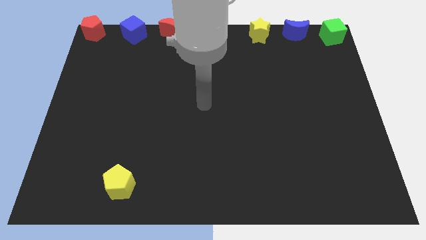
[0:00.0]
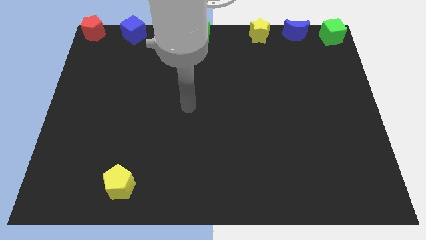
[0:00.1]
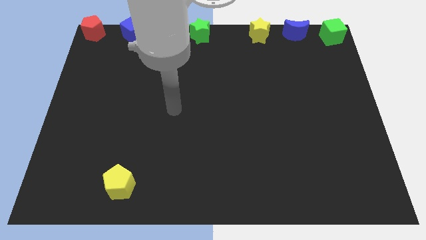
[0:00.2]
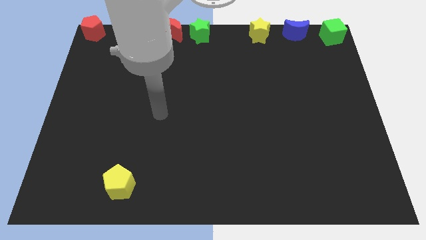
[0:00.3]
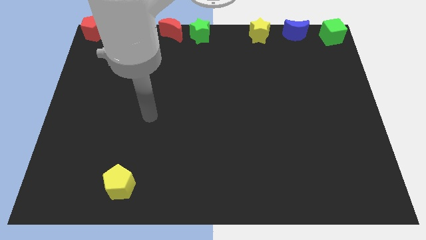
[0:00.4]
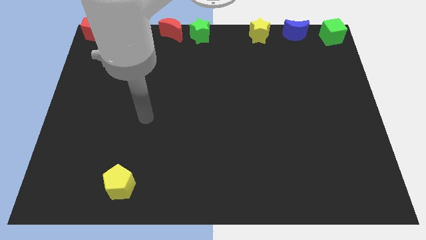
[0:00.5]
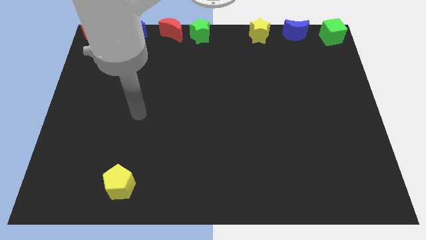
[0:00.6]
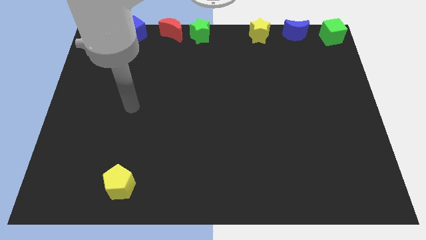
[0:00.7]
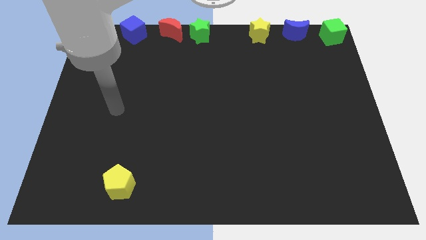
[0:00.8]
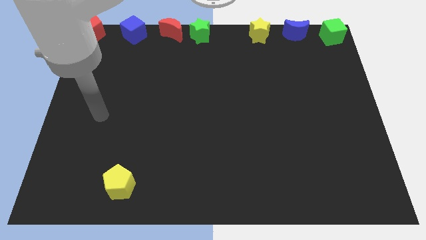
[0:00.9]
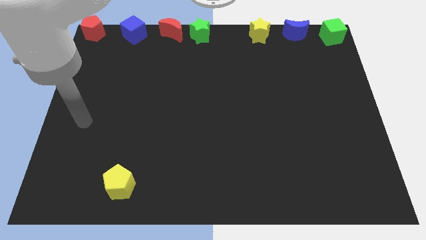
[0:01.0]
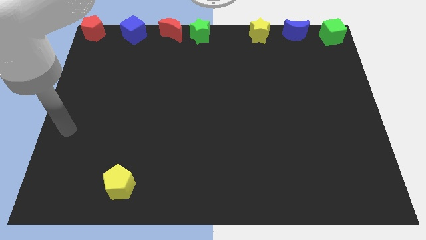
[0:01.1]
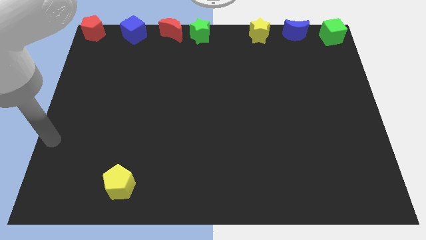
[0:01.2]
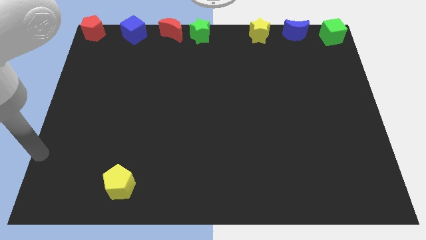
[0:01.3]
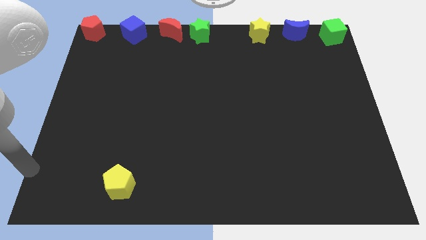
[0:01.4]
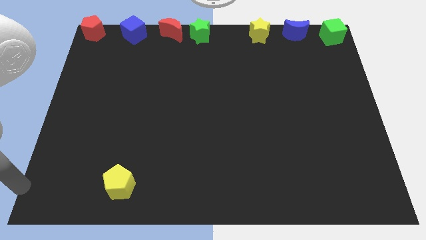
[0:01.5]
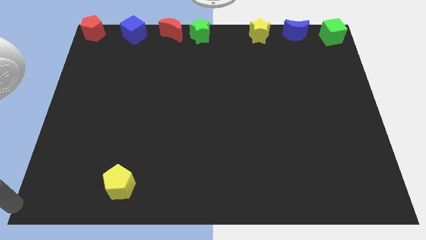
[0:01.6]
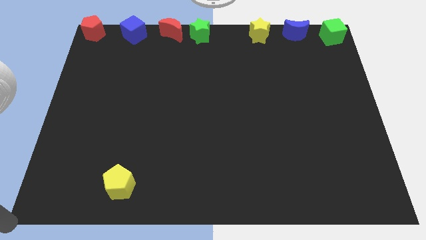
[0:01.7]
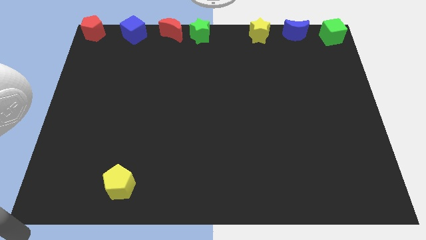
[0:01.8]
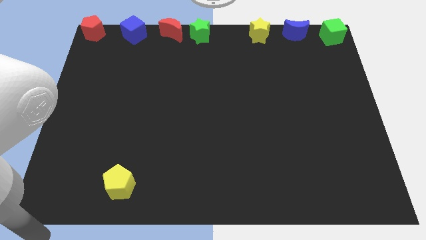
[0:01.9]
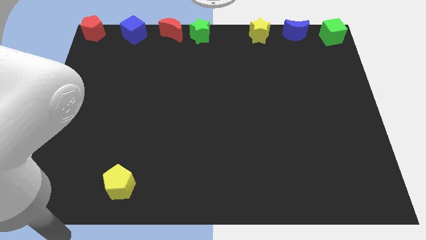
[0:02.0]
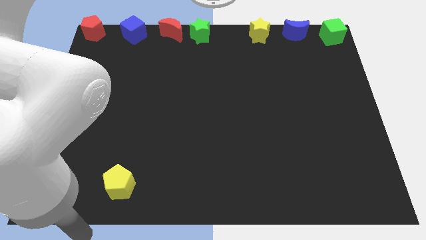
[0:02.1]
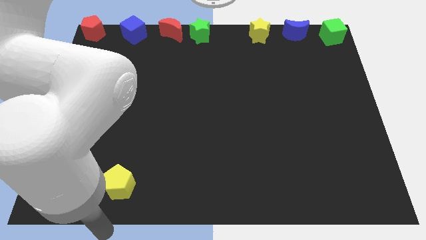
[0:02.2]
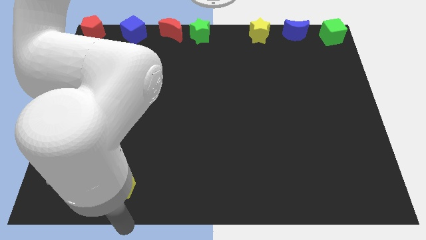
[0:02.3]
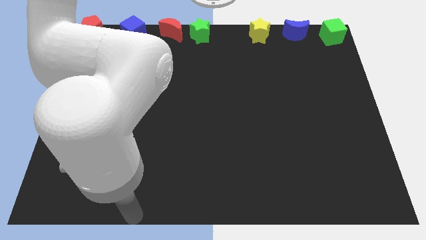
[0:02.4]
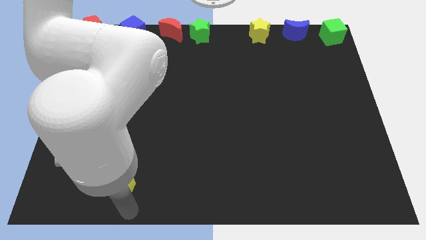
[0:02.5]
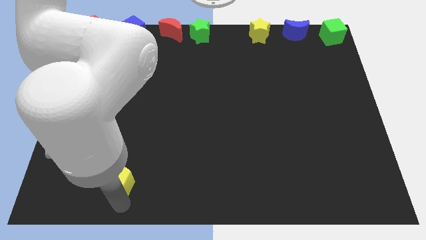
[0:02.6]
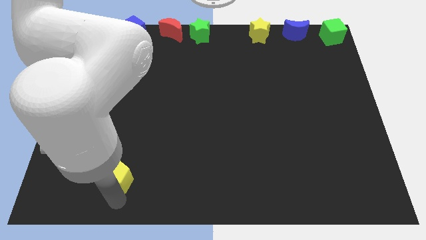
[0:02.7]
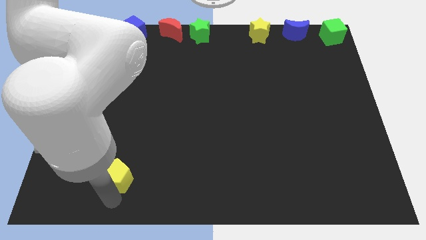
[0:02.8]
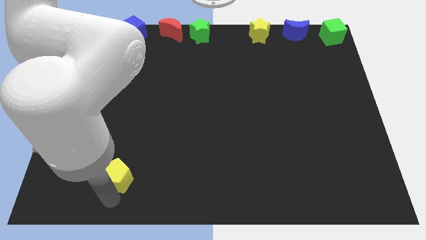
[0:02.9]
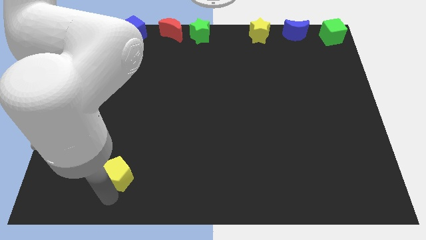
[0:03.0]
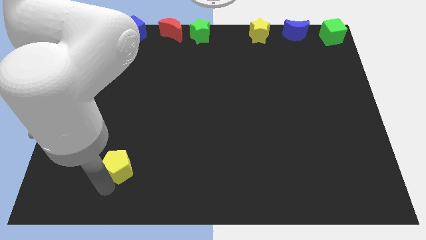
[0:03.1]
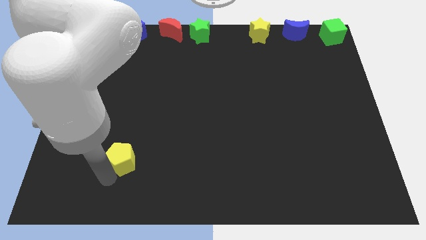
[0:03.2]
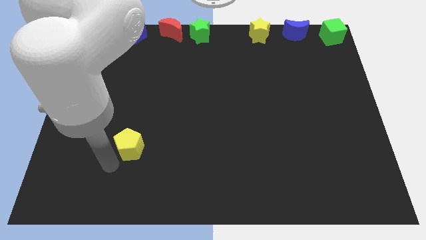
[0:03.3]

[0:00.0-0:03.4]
push the yellow pentagon towards the green star

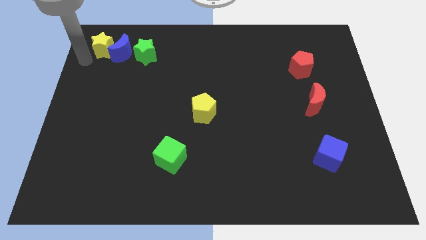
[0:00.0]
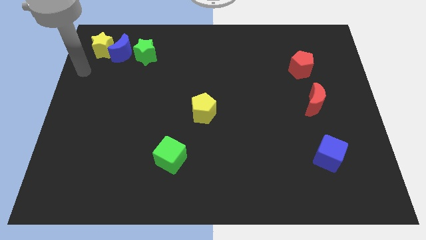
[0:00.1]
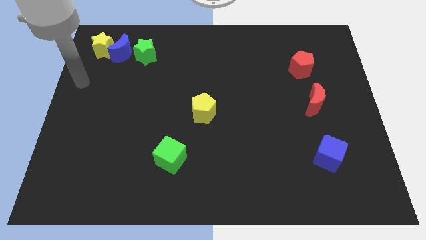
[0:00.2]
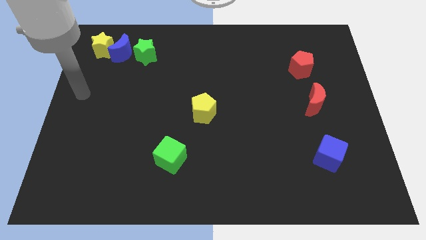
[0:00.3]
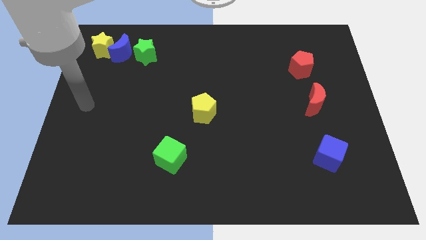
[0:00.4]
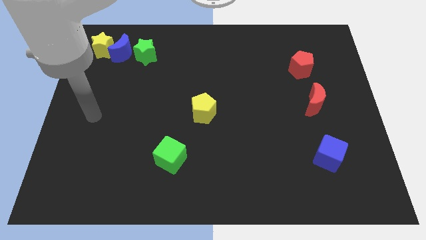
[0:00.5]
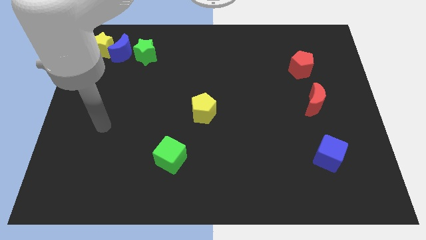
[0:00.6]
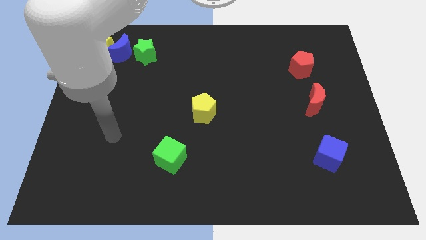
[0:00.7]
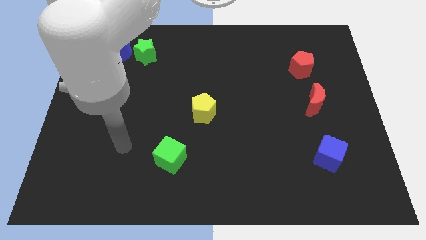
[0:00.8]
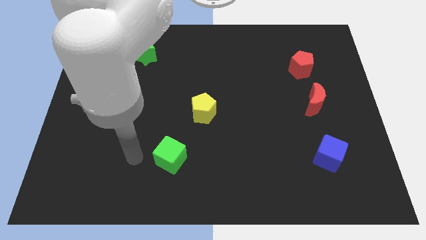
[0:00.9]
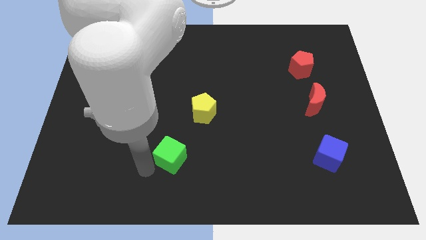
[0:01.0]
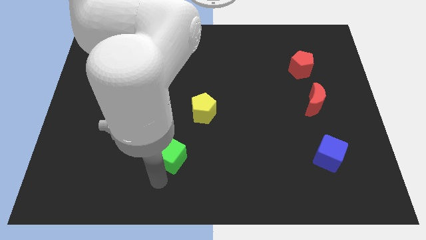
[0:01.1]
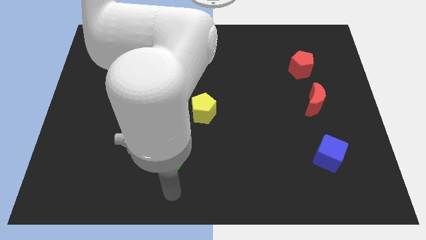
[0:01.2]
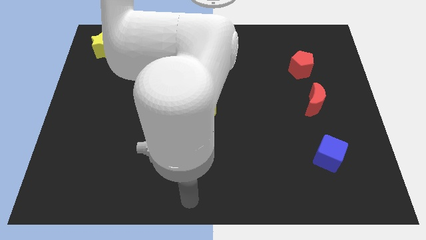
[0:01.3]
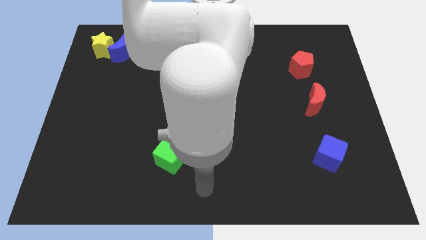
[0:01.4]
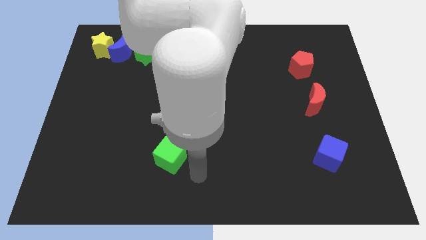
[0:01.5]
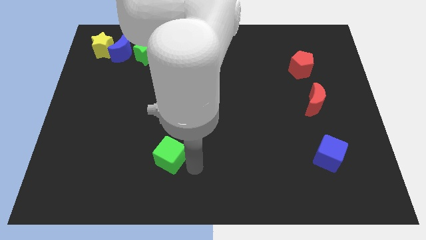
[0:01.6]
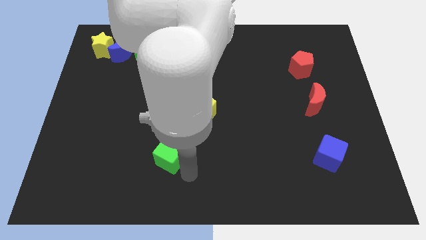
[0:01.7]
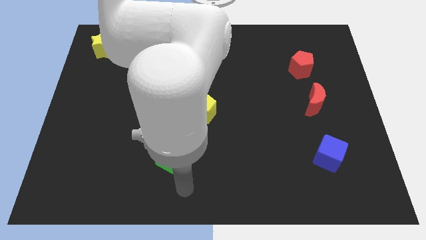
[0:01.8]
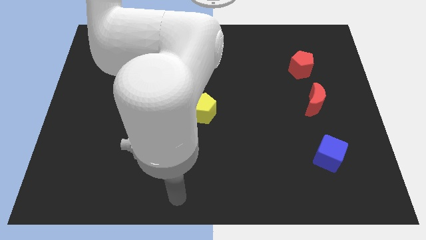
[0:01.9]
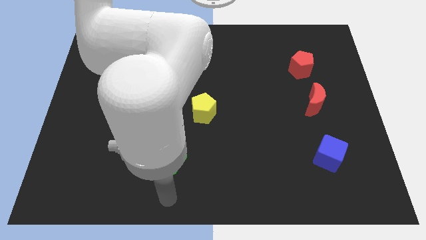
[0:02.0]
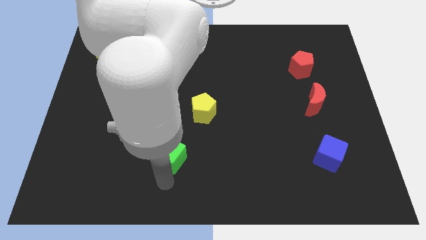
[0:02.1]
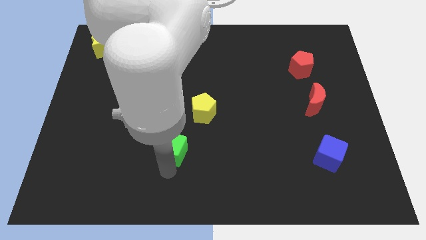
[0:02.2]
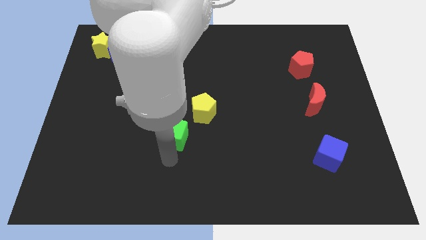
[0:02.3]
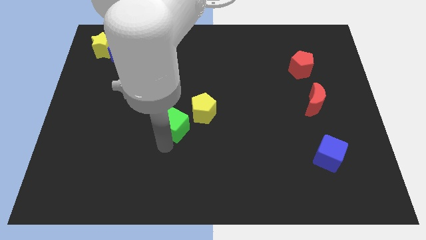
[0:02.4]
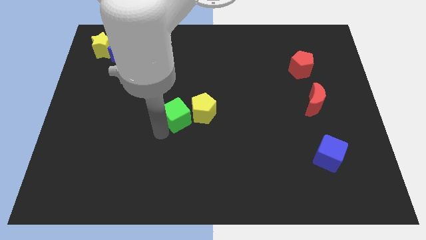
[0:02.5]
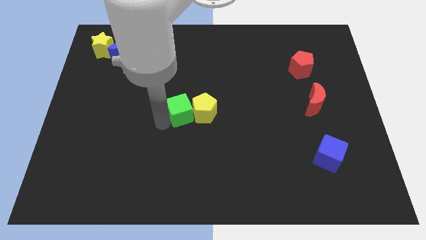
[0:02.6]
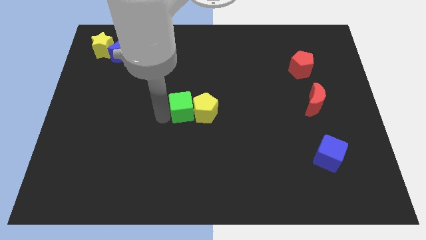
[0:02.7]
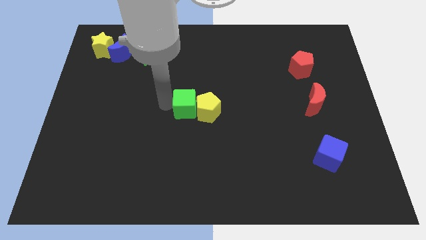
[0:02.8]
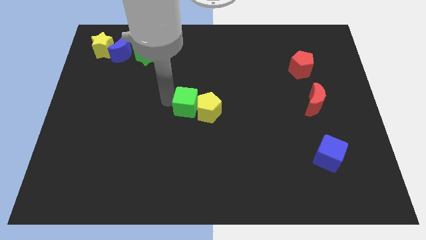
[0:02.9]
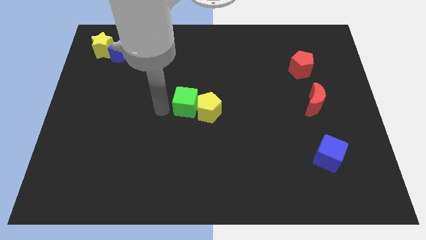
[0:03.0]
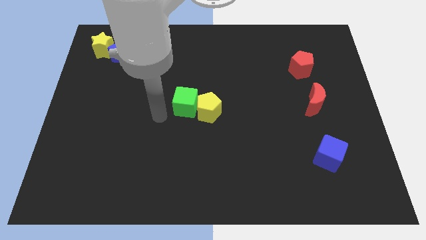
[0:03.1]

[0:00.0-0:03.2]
push the green cube to the left of the yellow pentagon

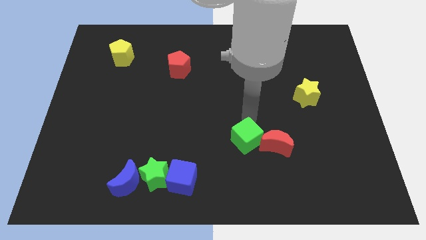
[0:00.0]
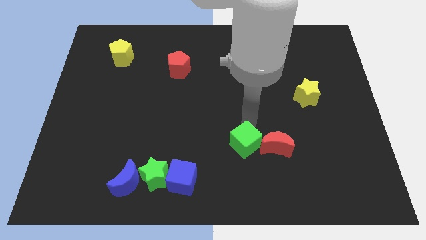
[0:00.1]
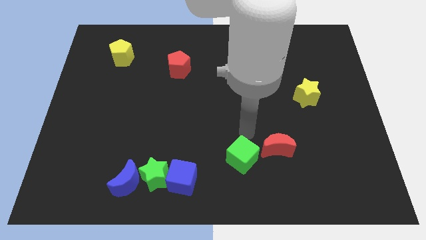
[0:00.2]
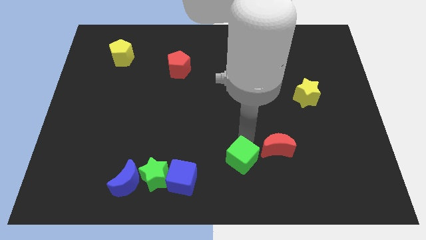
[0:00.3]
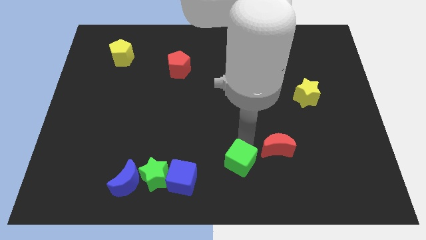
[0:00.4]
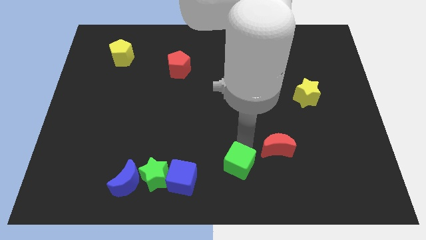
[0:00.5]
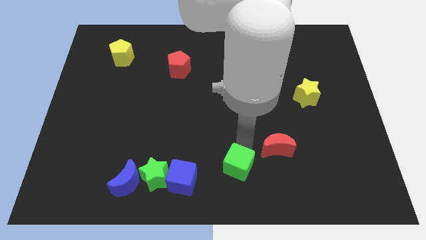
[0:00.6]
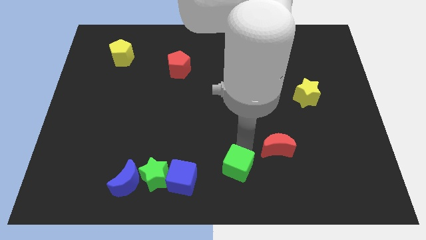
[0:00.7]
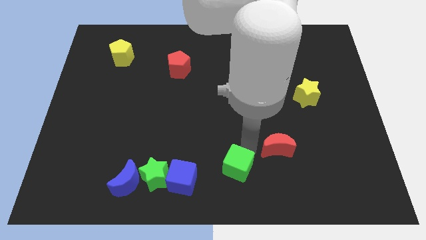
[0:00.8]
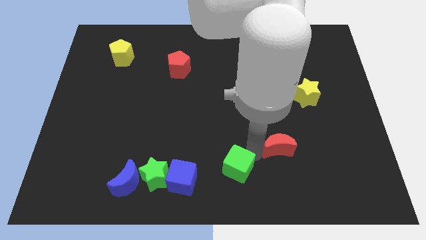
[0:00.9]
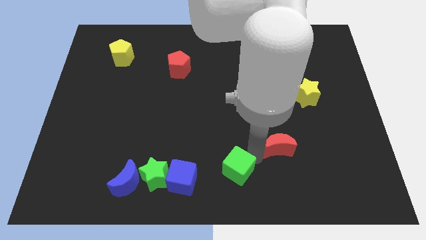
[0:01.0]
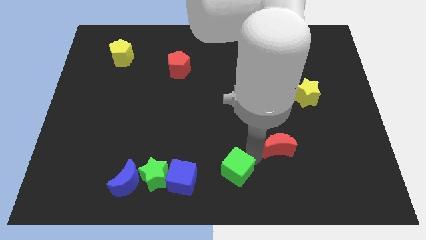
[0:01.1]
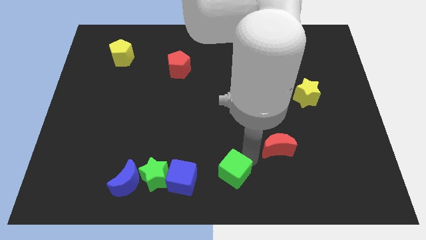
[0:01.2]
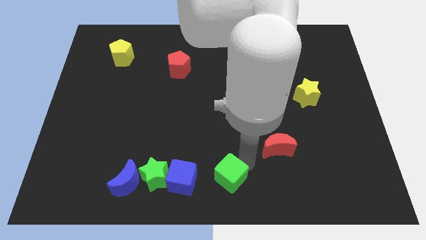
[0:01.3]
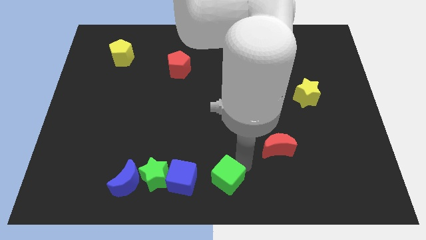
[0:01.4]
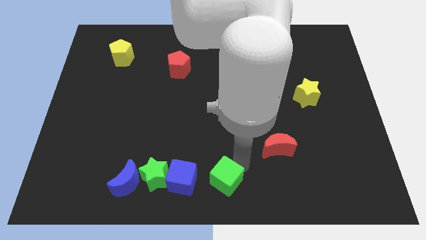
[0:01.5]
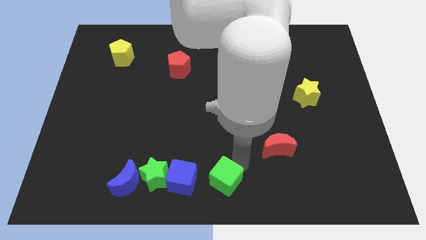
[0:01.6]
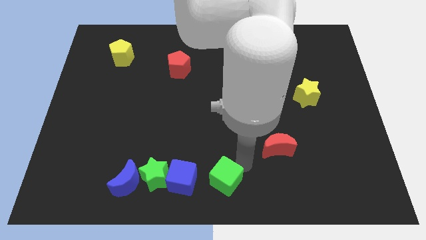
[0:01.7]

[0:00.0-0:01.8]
move the green cube away from the red crescent

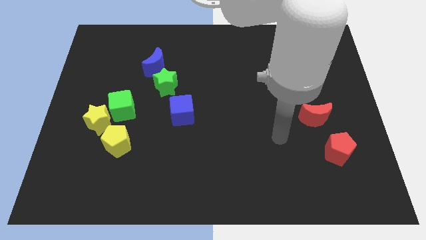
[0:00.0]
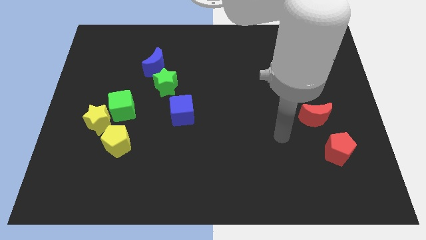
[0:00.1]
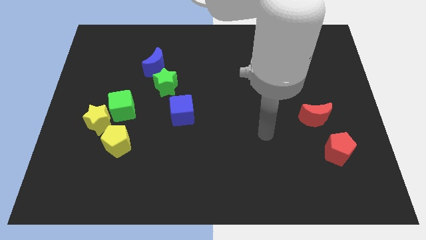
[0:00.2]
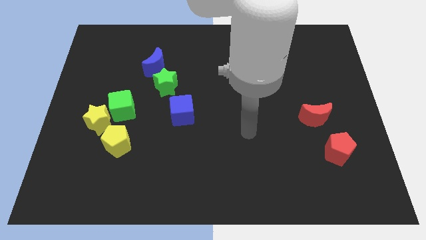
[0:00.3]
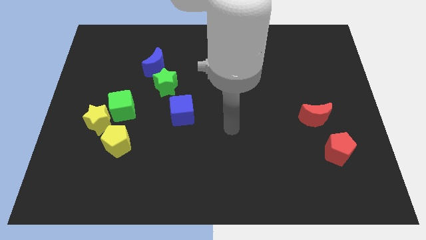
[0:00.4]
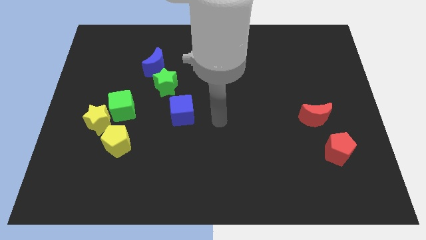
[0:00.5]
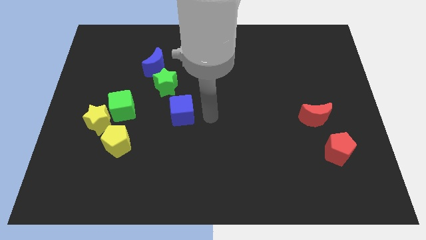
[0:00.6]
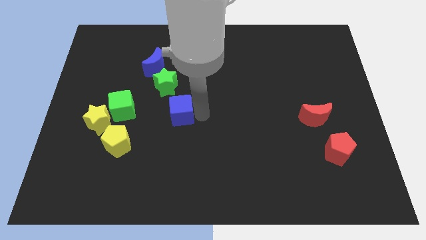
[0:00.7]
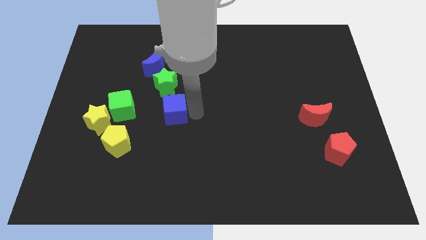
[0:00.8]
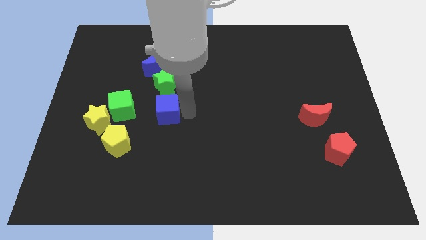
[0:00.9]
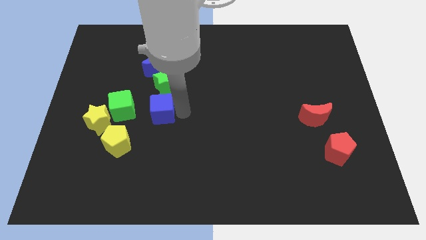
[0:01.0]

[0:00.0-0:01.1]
place blue cube to the bottom of green star
